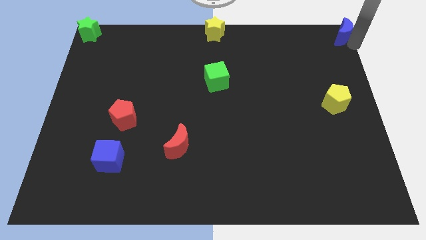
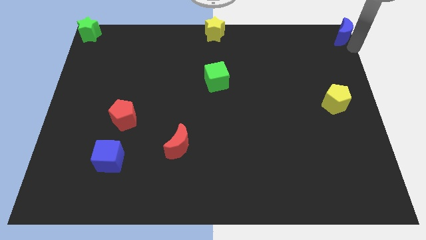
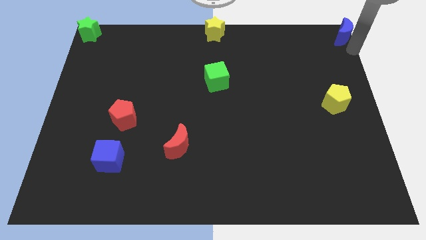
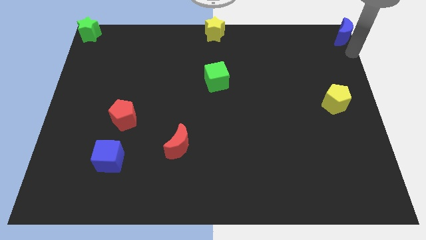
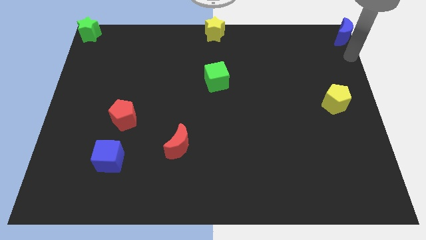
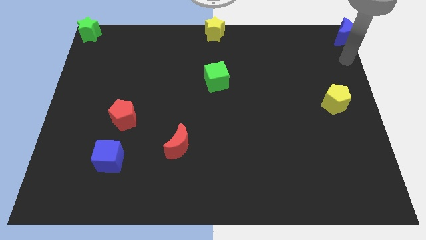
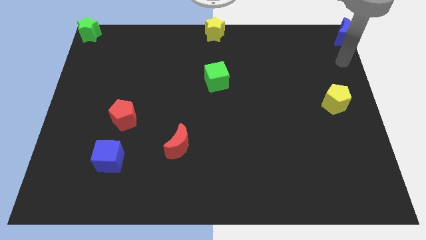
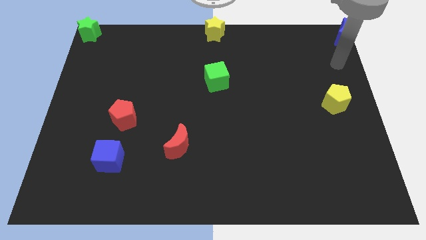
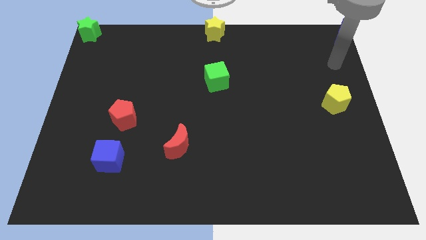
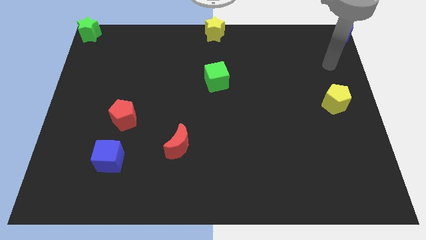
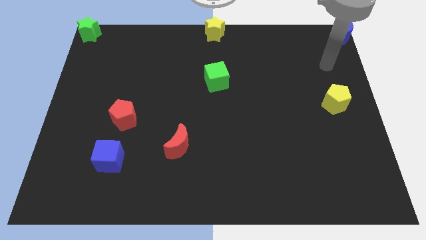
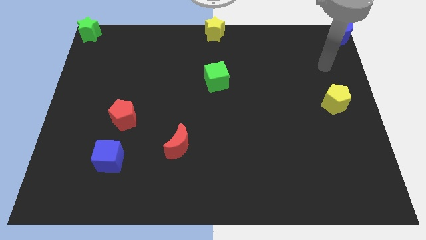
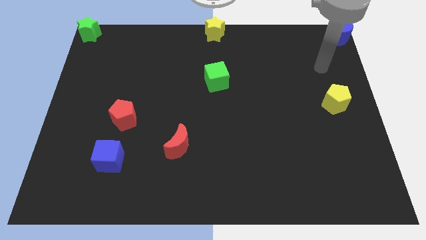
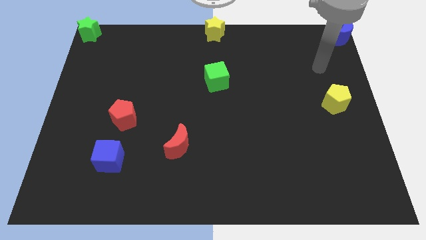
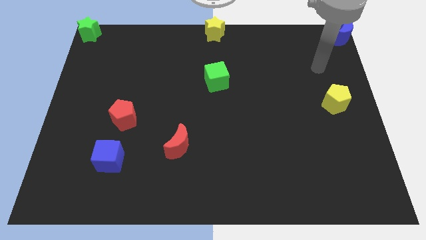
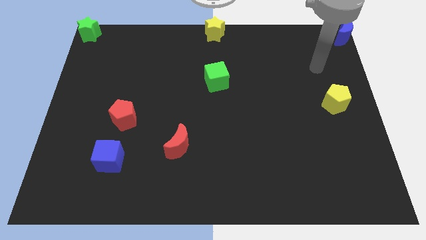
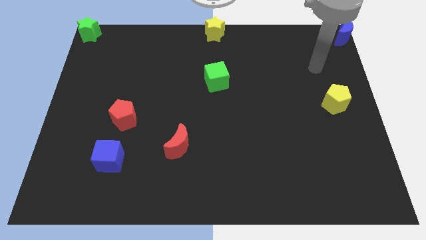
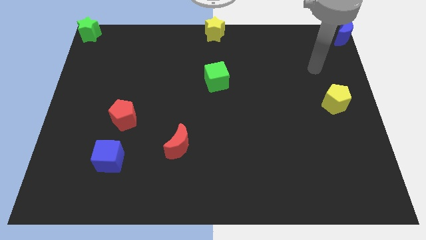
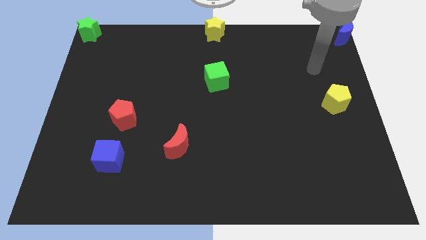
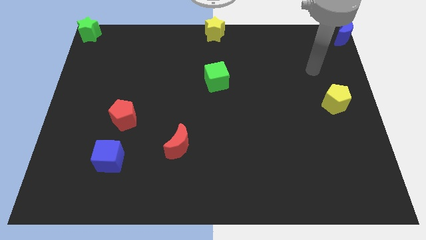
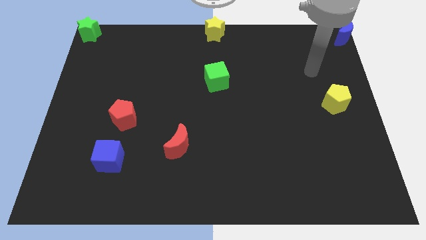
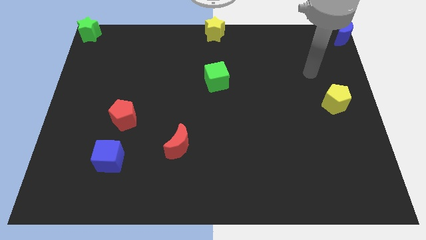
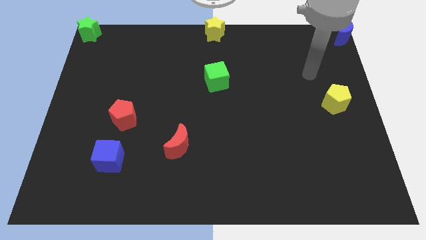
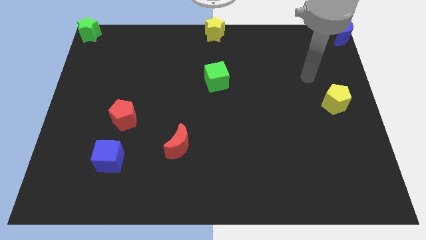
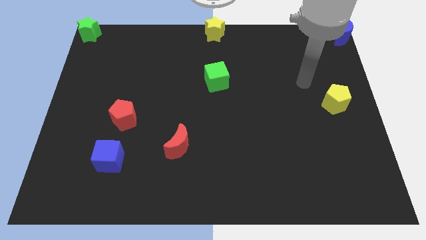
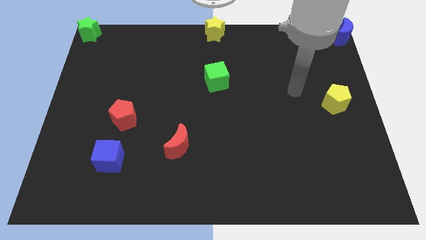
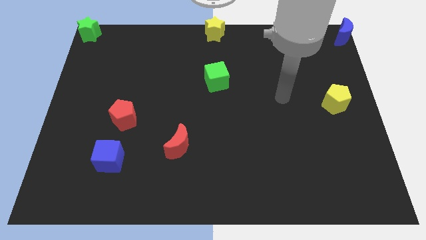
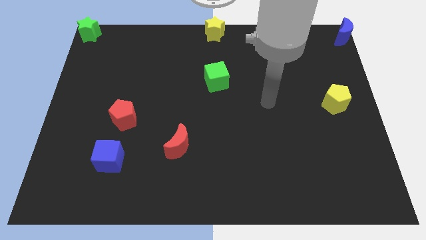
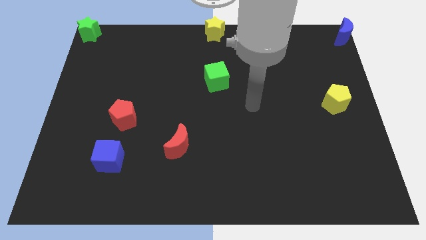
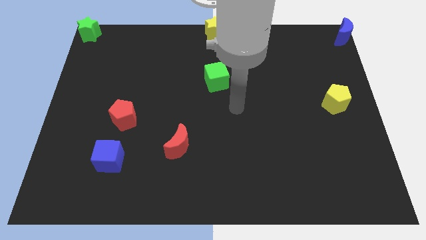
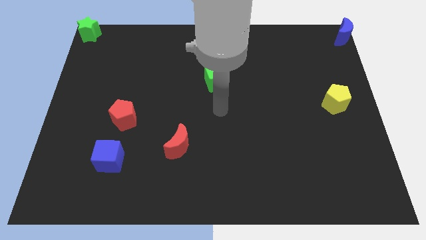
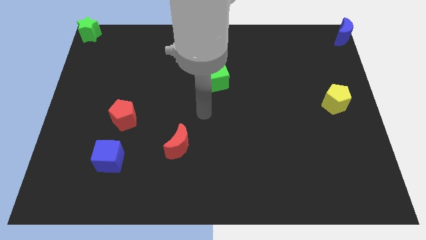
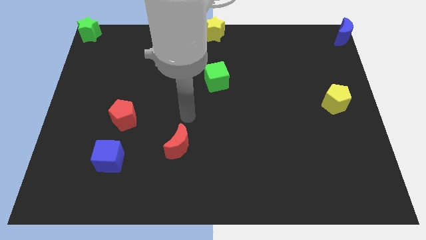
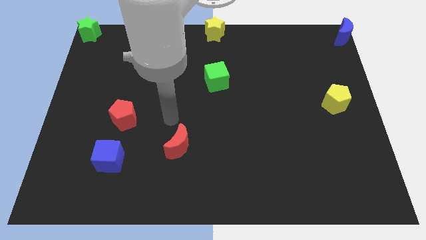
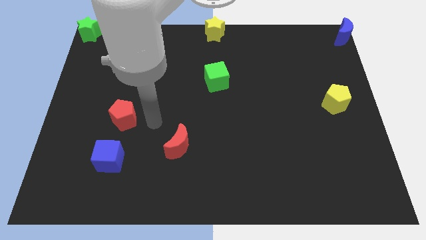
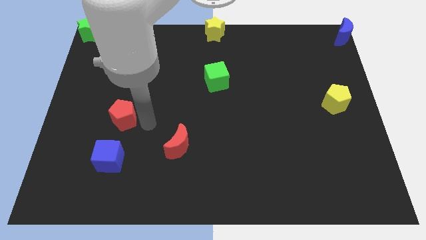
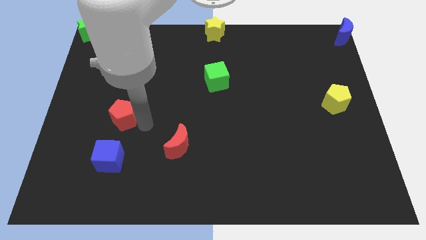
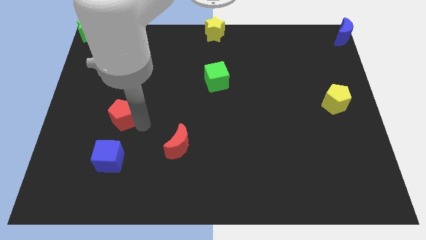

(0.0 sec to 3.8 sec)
move your arm form the red pentagon

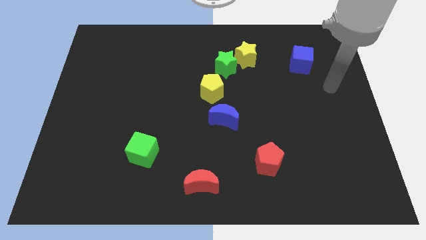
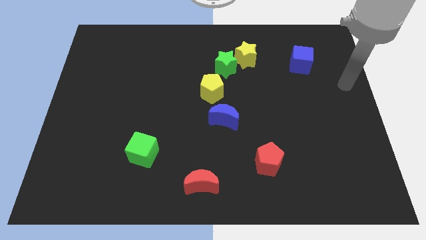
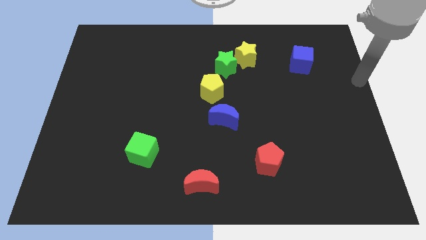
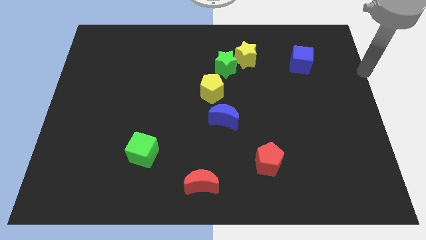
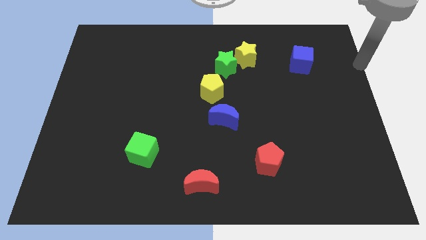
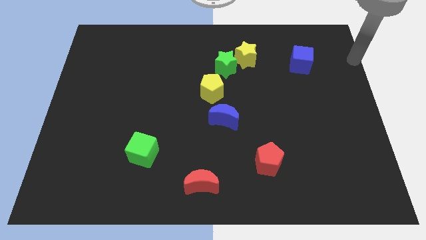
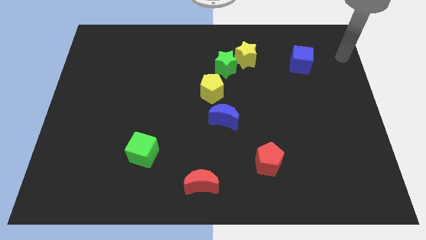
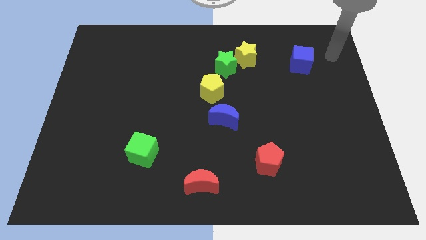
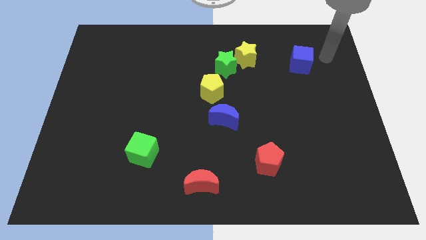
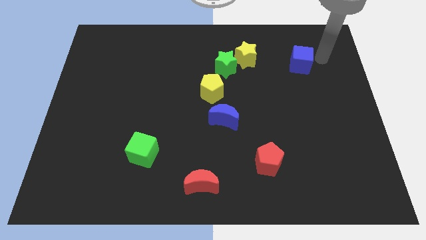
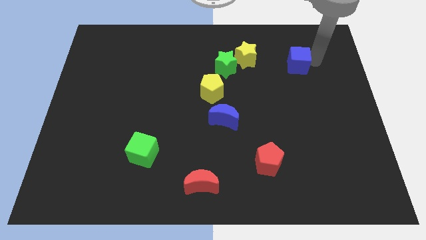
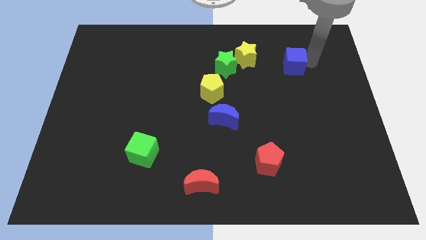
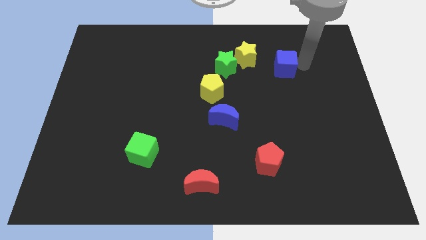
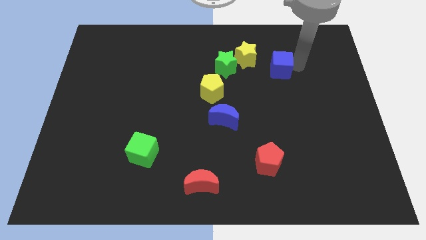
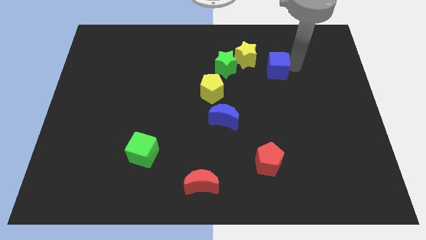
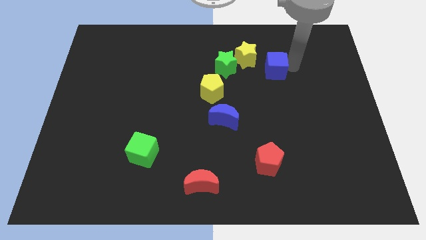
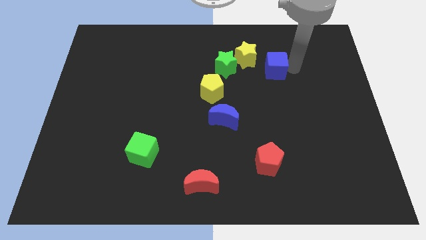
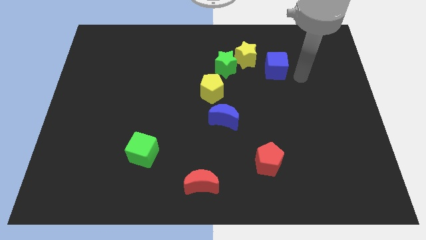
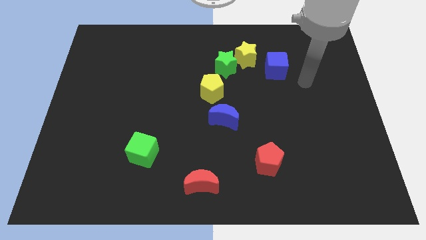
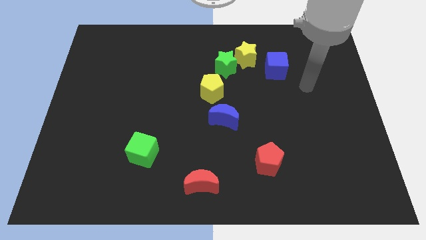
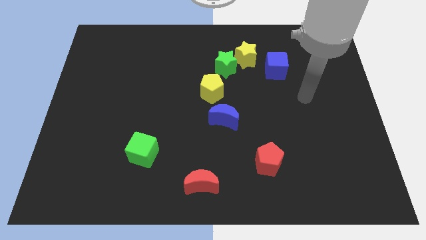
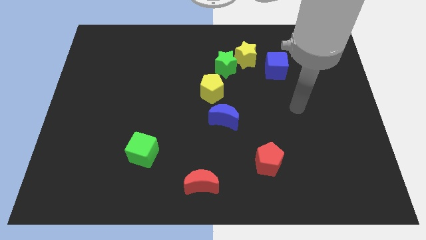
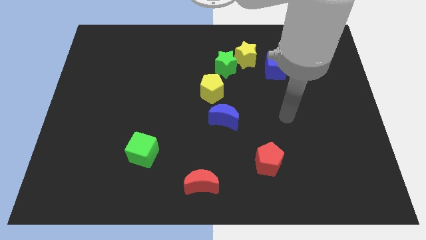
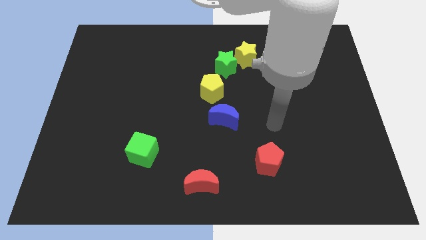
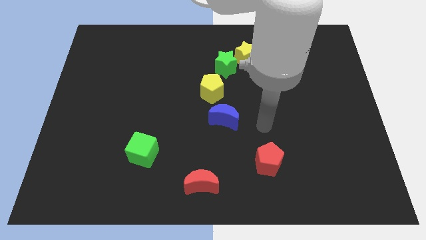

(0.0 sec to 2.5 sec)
move blue cube slightly to left

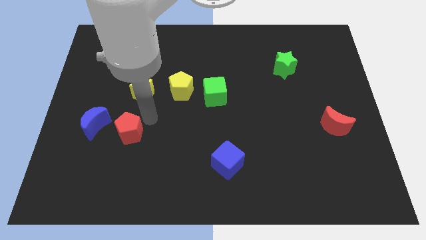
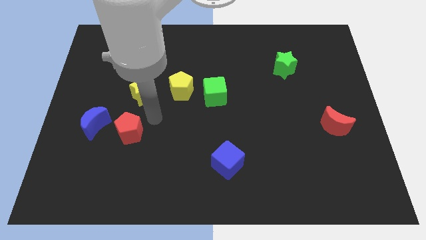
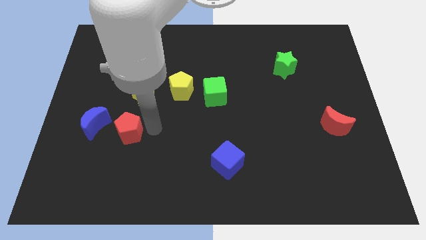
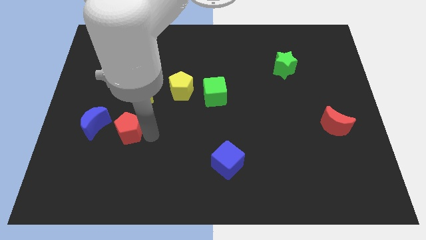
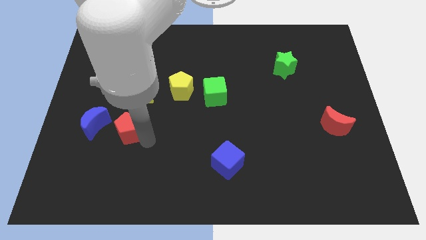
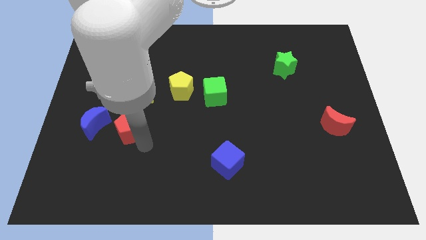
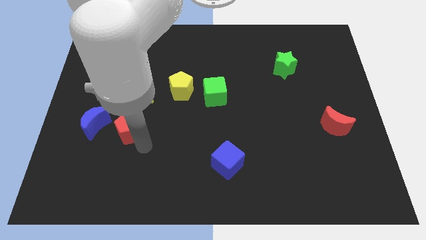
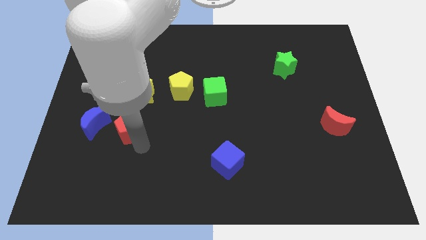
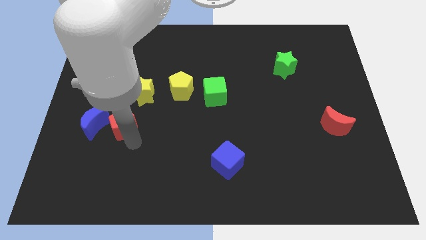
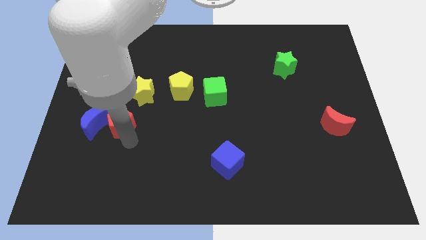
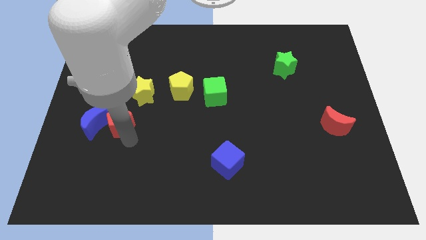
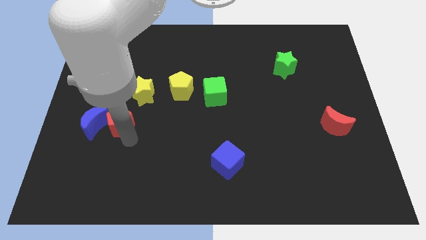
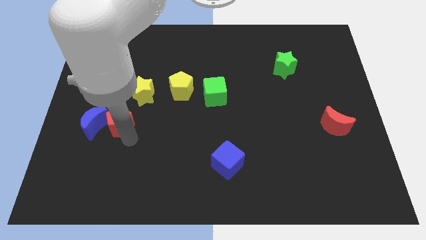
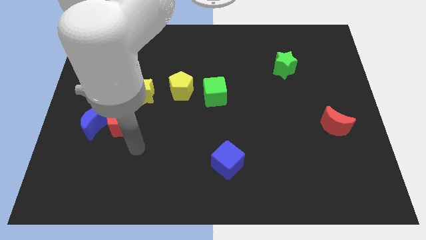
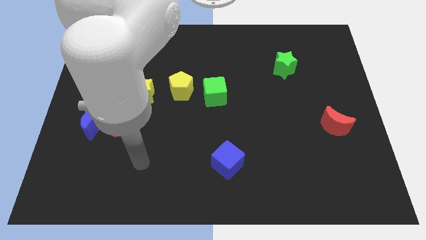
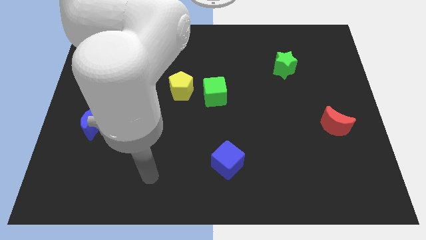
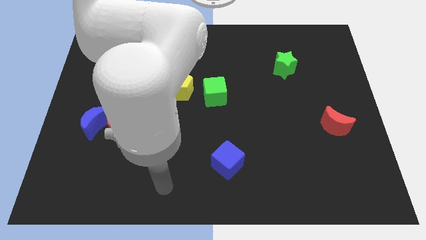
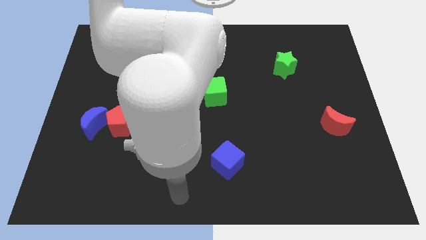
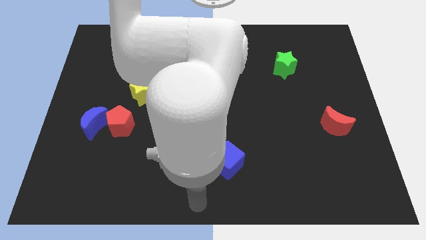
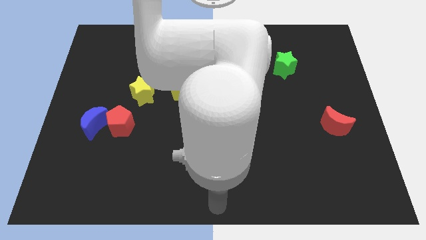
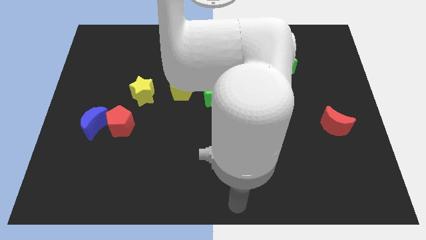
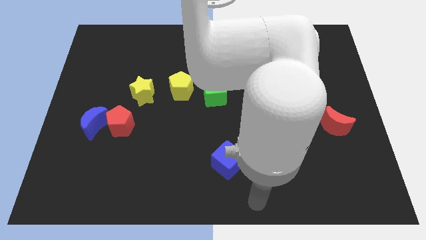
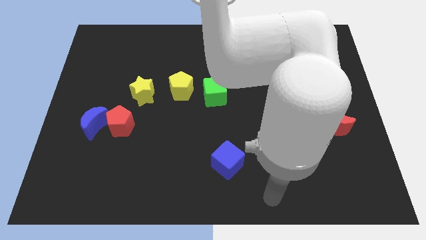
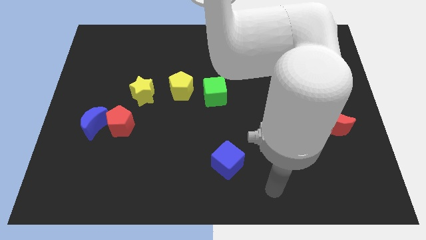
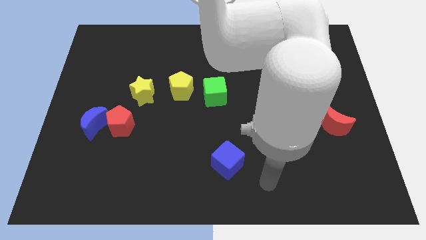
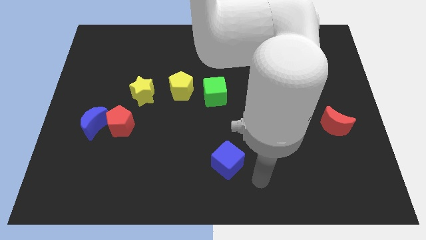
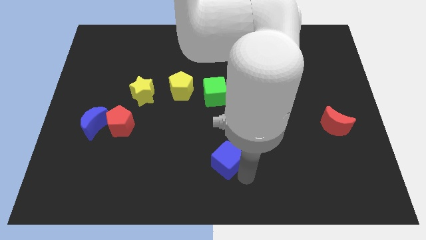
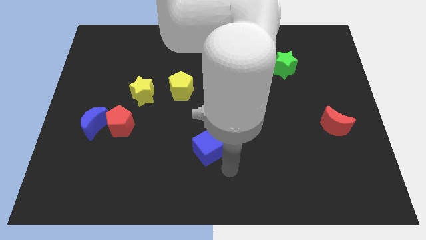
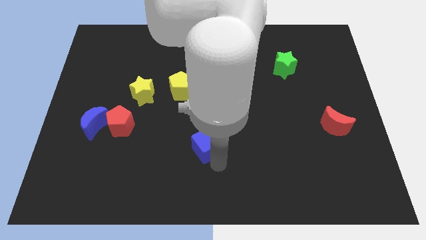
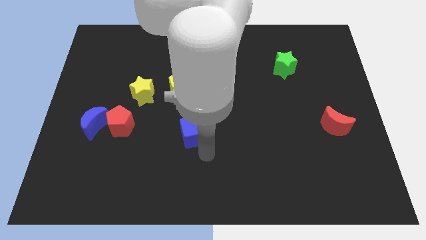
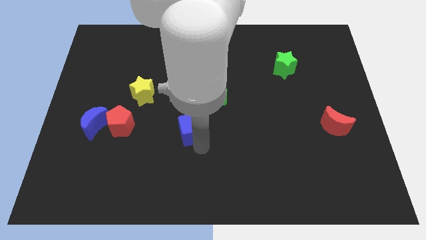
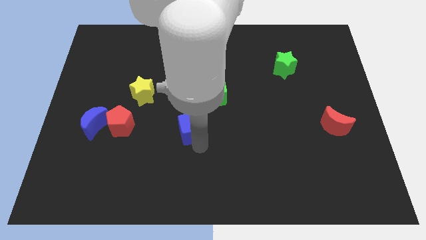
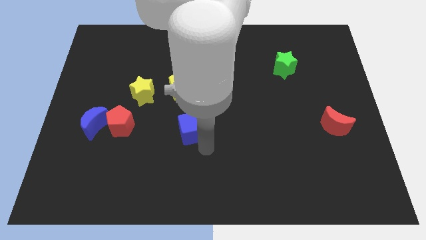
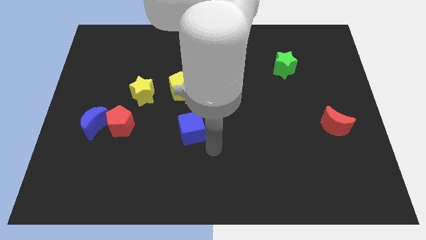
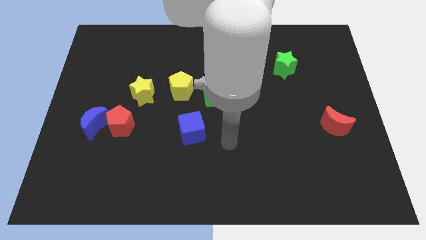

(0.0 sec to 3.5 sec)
place the blue cube below the yellow pentagon
